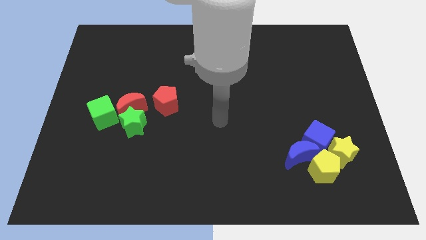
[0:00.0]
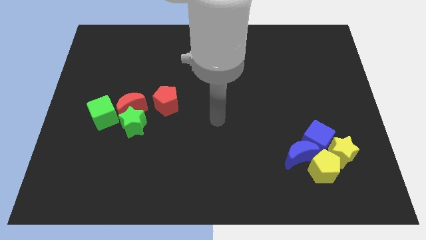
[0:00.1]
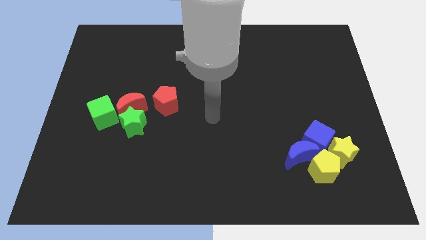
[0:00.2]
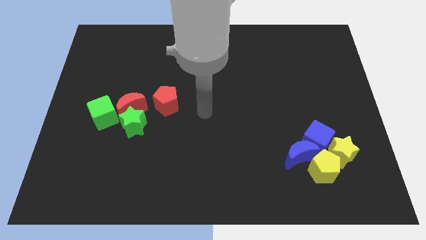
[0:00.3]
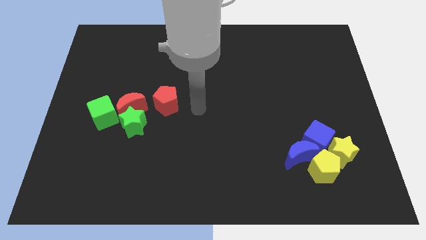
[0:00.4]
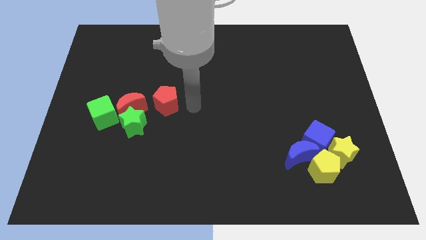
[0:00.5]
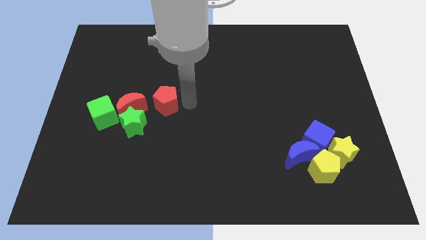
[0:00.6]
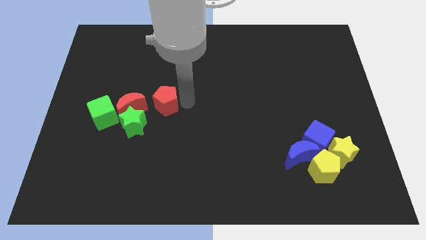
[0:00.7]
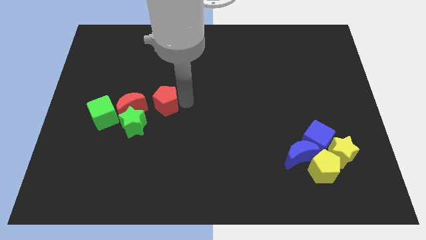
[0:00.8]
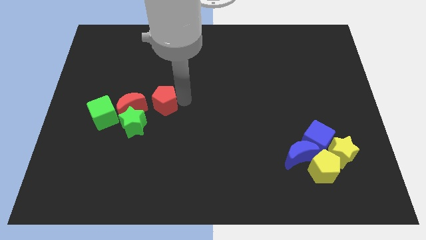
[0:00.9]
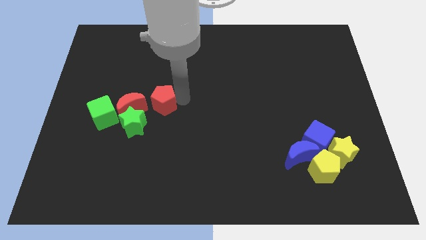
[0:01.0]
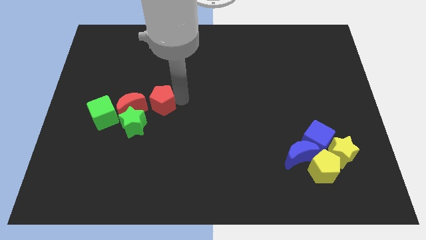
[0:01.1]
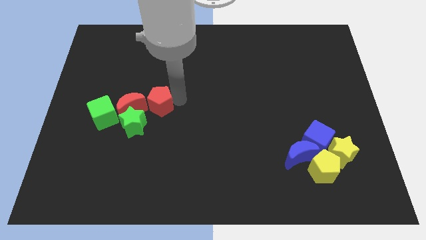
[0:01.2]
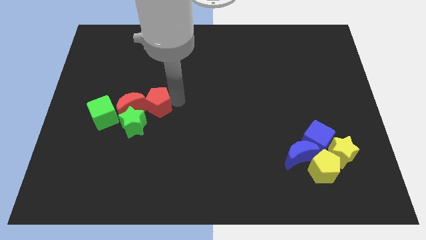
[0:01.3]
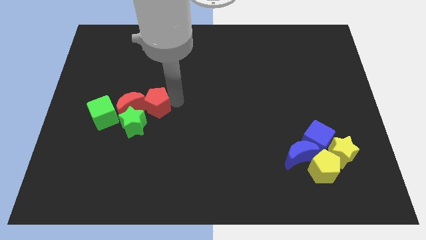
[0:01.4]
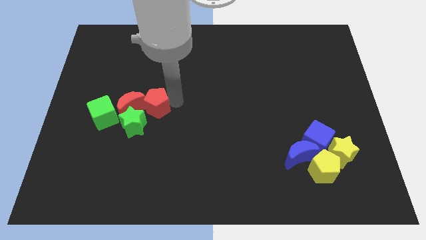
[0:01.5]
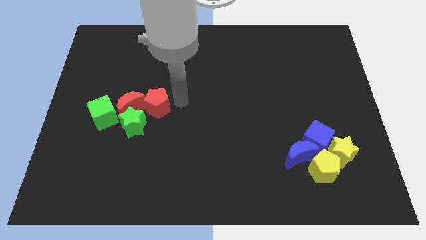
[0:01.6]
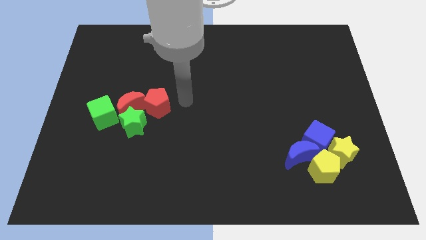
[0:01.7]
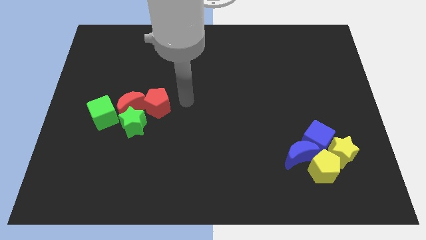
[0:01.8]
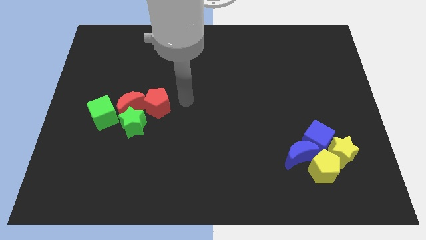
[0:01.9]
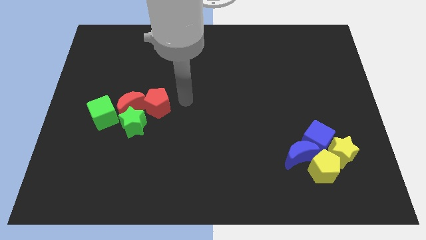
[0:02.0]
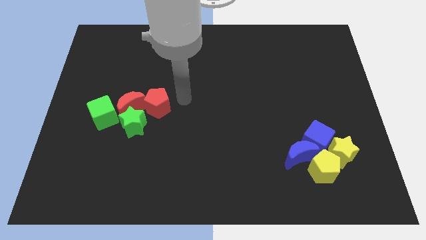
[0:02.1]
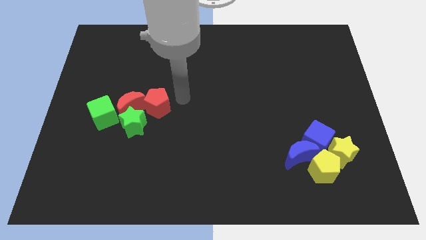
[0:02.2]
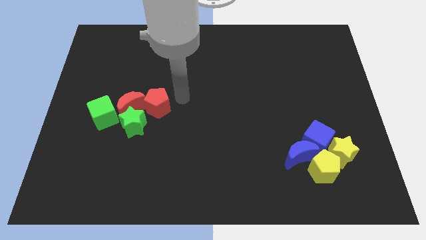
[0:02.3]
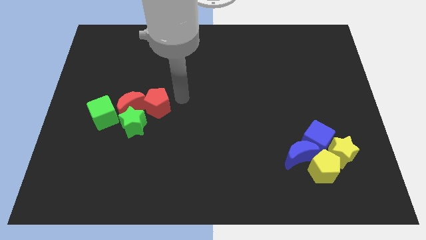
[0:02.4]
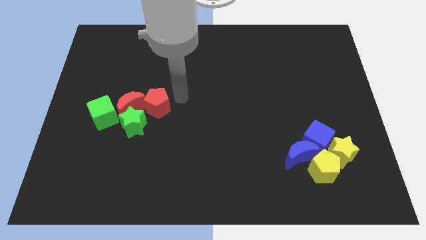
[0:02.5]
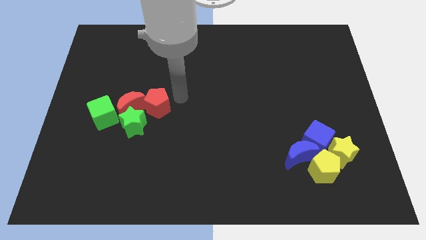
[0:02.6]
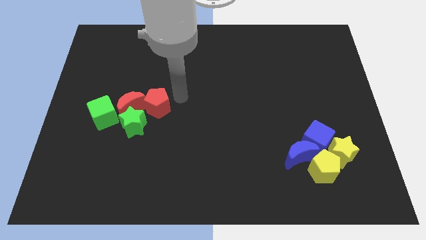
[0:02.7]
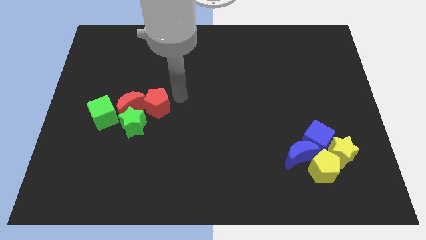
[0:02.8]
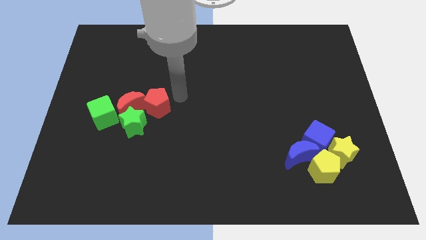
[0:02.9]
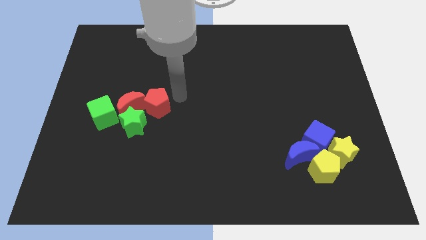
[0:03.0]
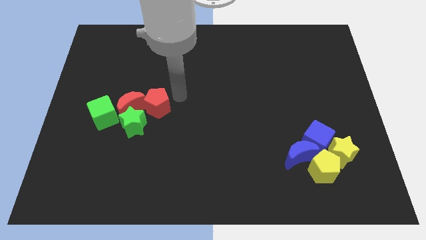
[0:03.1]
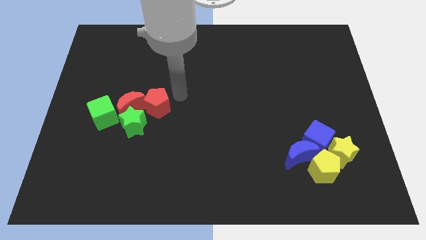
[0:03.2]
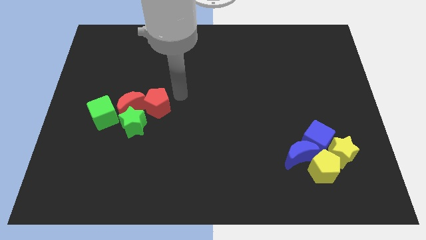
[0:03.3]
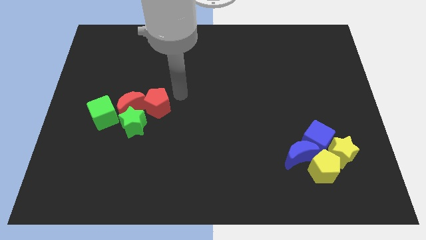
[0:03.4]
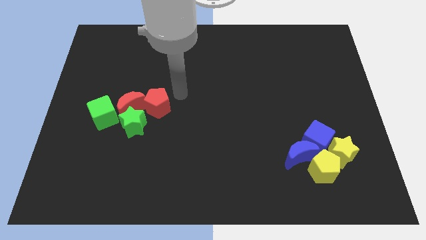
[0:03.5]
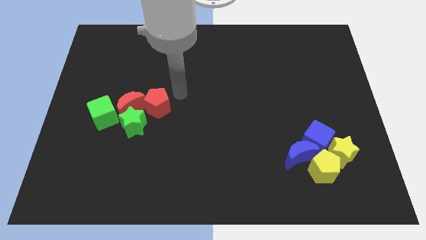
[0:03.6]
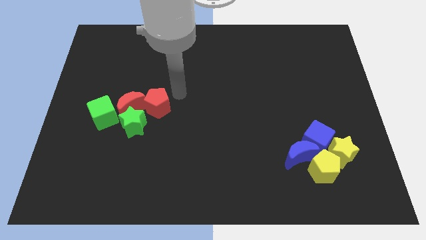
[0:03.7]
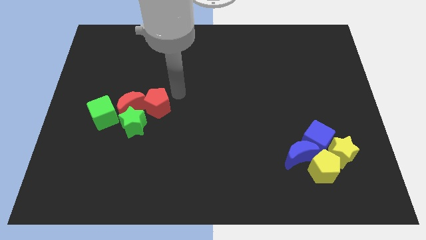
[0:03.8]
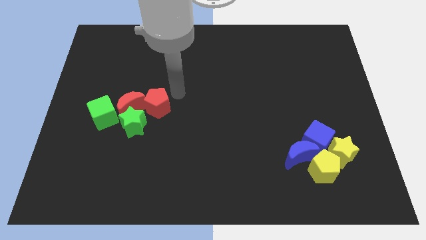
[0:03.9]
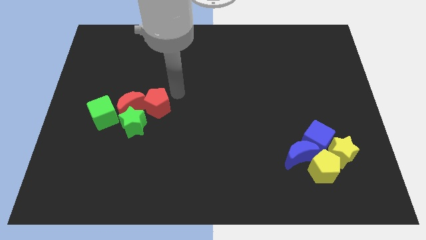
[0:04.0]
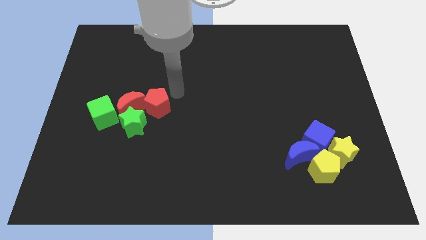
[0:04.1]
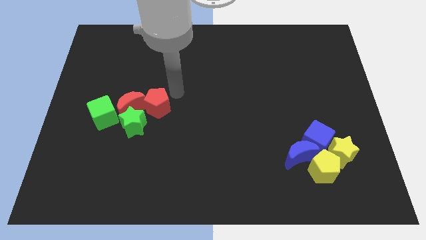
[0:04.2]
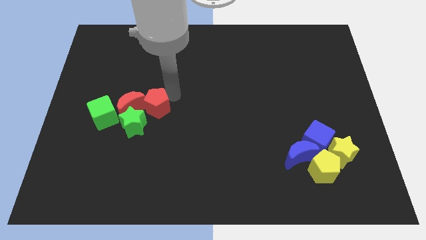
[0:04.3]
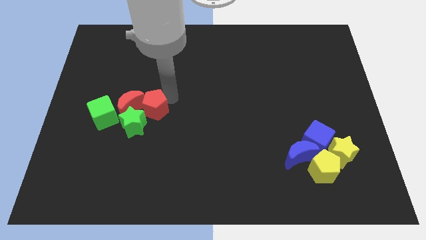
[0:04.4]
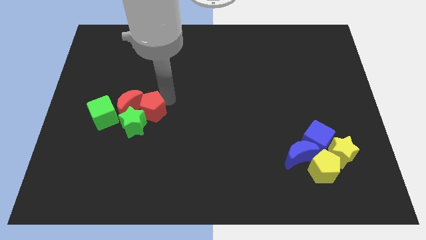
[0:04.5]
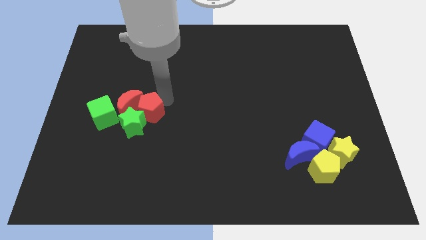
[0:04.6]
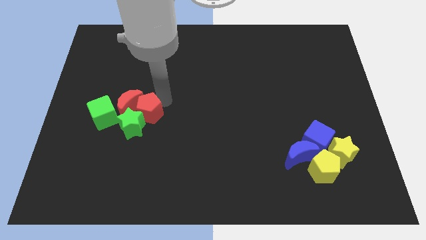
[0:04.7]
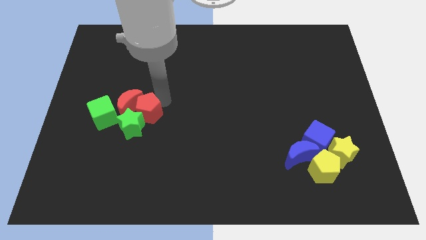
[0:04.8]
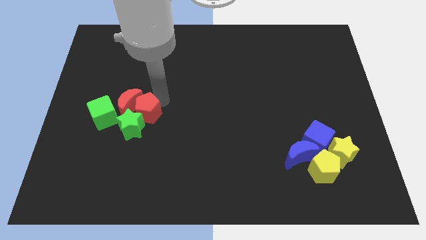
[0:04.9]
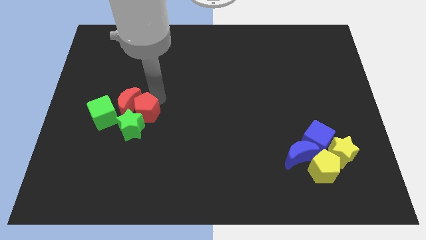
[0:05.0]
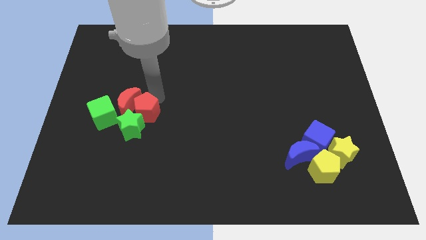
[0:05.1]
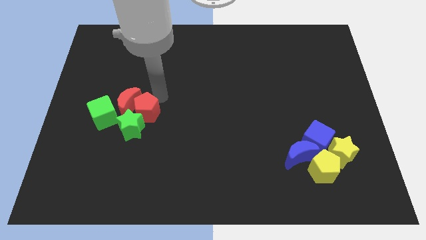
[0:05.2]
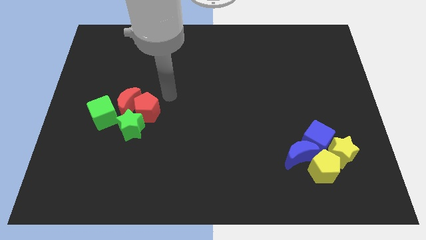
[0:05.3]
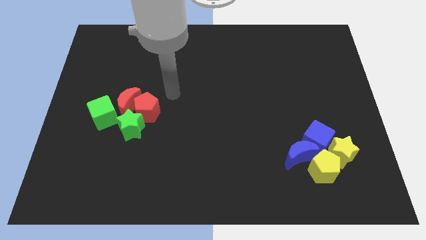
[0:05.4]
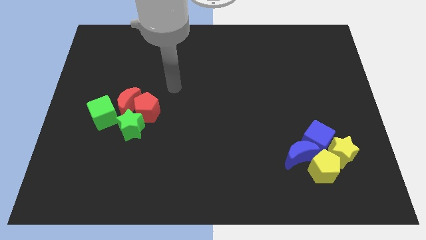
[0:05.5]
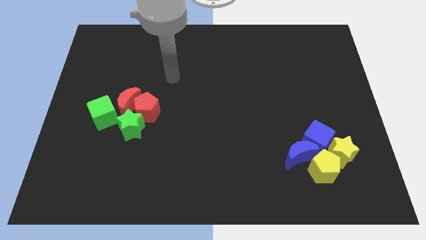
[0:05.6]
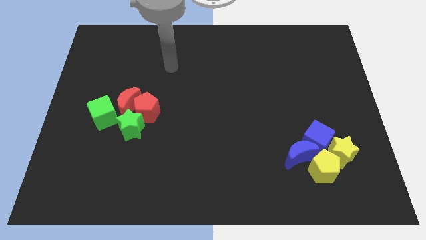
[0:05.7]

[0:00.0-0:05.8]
slightly move the red pentagon into the red crescent

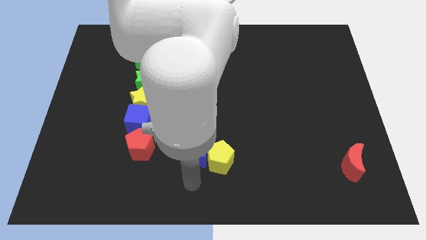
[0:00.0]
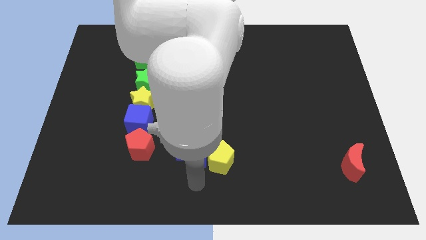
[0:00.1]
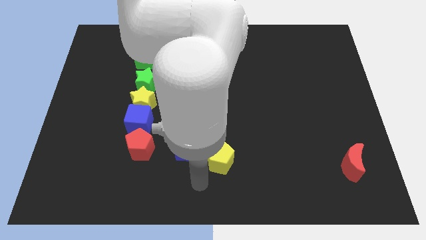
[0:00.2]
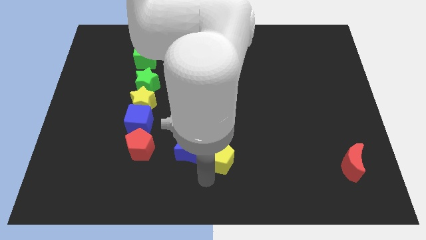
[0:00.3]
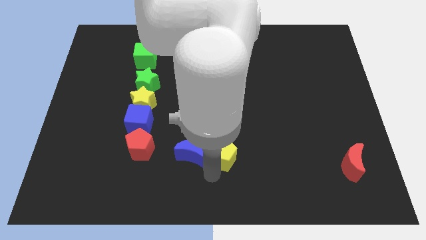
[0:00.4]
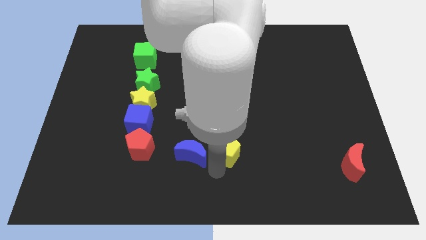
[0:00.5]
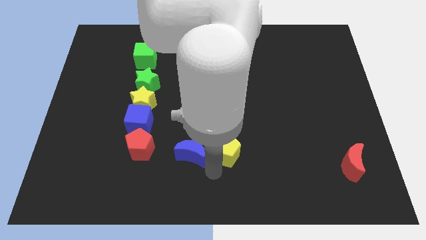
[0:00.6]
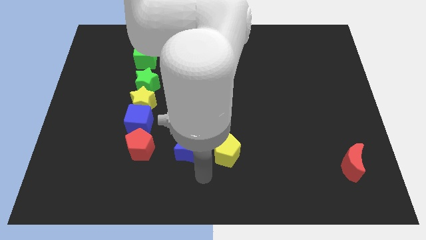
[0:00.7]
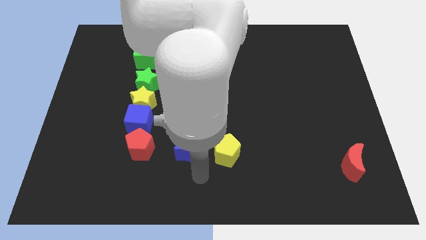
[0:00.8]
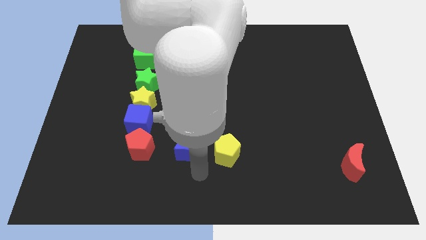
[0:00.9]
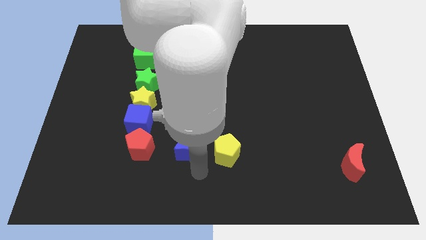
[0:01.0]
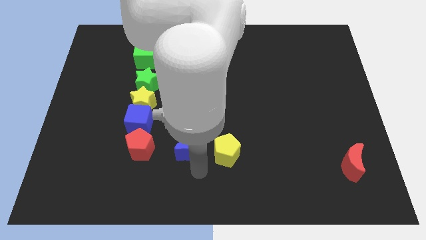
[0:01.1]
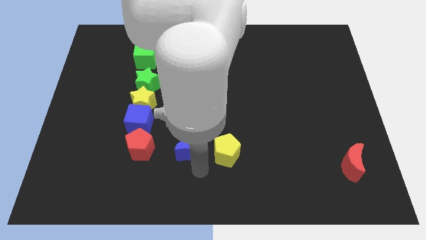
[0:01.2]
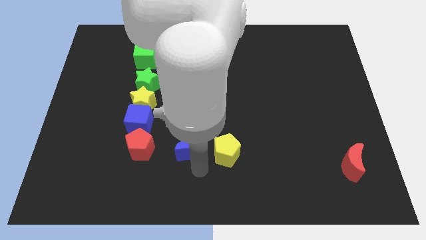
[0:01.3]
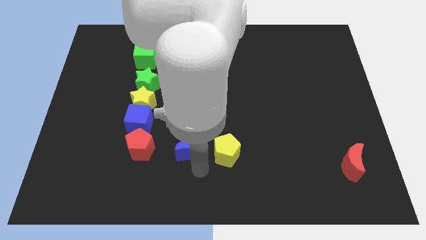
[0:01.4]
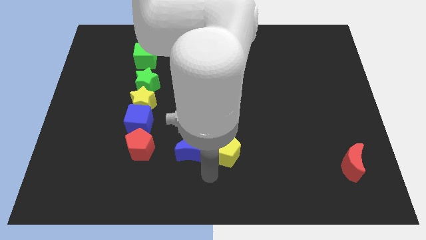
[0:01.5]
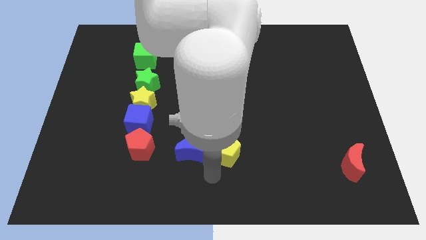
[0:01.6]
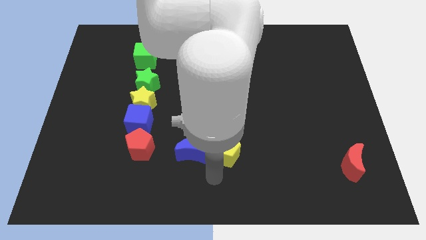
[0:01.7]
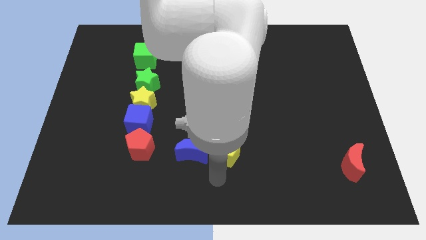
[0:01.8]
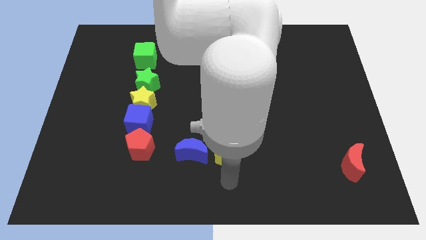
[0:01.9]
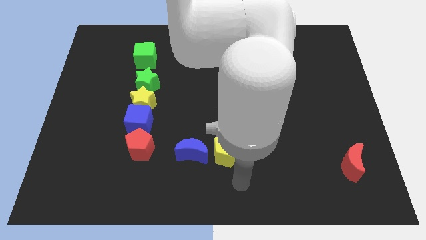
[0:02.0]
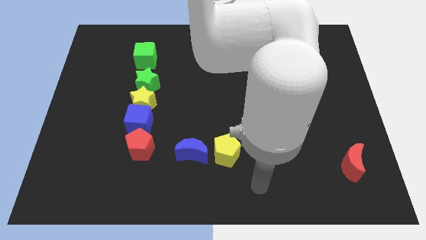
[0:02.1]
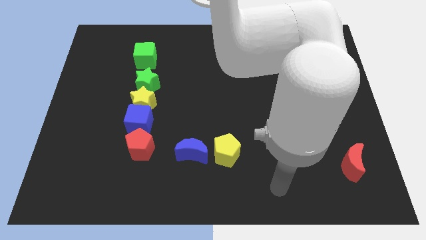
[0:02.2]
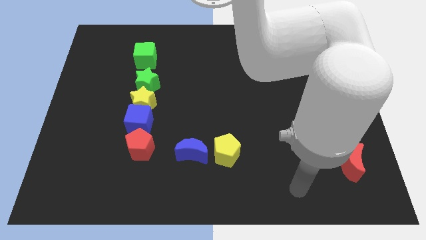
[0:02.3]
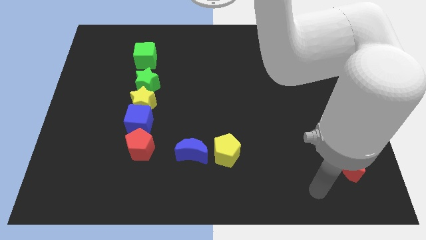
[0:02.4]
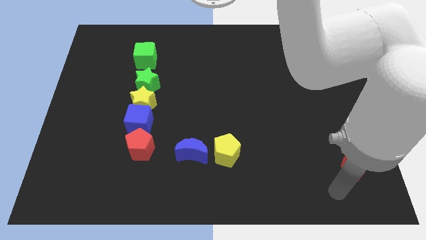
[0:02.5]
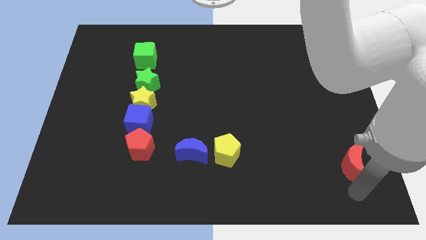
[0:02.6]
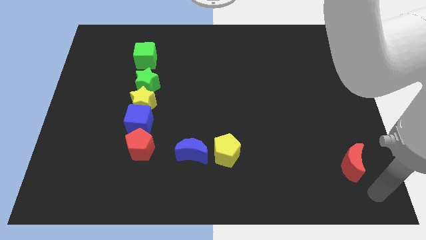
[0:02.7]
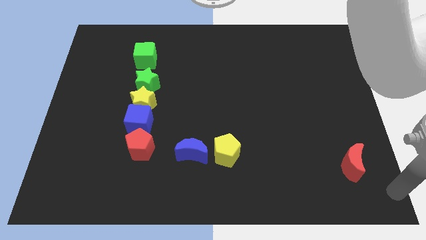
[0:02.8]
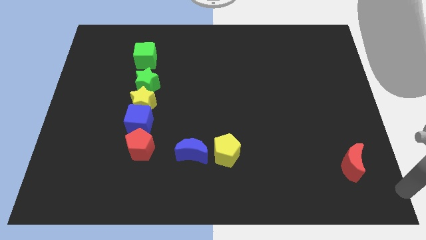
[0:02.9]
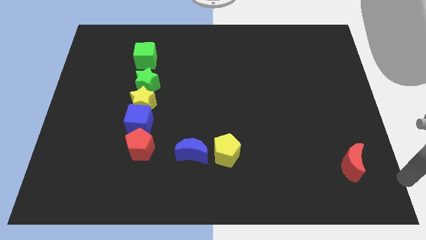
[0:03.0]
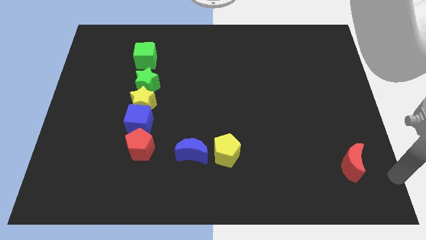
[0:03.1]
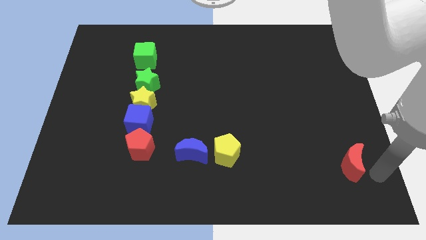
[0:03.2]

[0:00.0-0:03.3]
place the yellow pentagon to the right side of the blue moon
